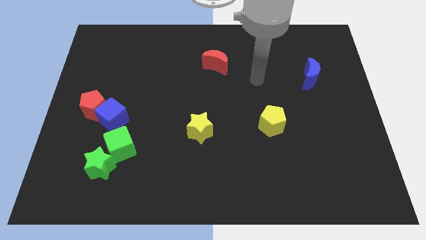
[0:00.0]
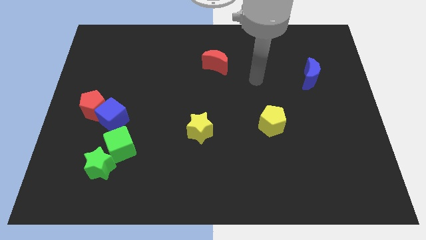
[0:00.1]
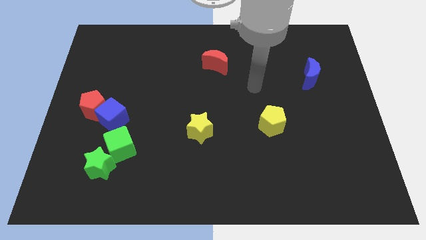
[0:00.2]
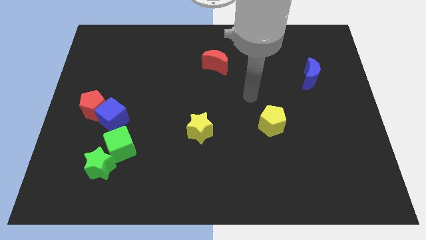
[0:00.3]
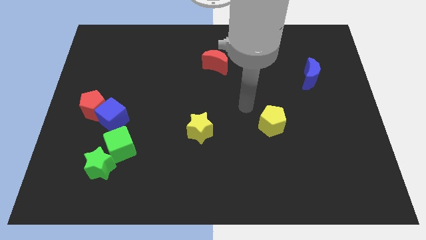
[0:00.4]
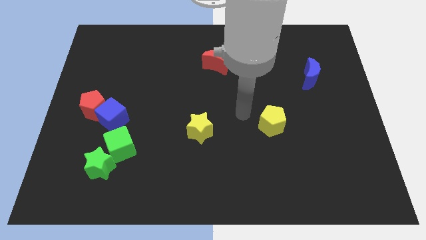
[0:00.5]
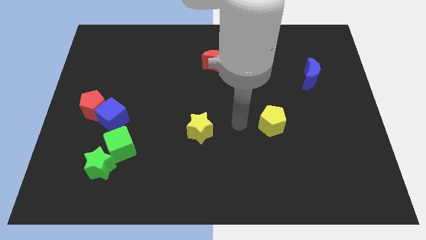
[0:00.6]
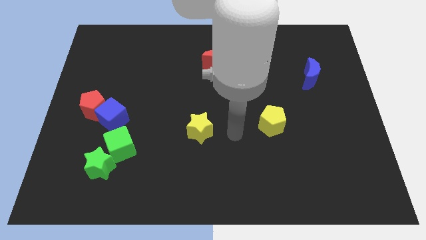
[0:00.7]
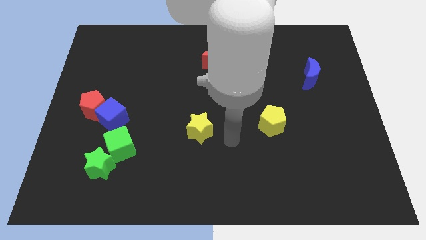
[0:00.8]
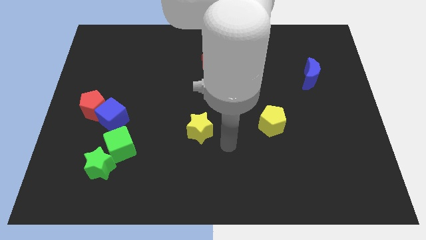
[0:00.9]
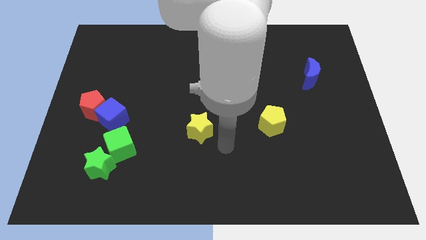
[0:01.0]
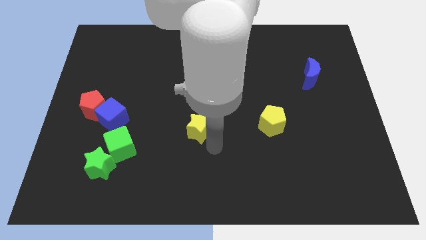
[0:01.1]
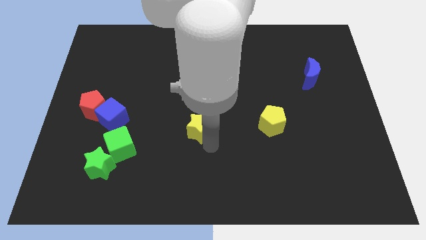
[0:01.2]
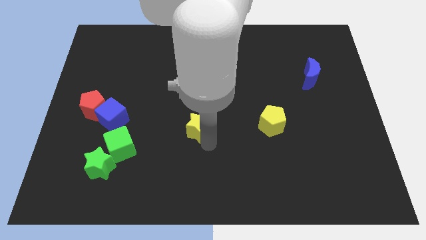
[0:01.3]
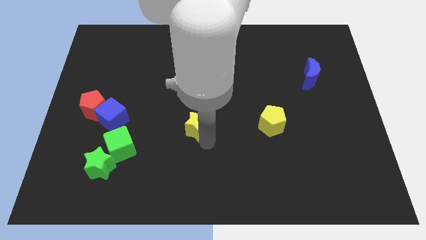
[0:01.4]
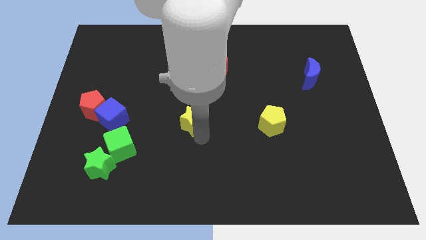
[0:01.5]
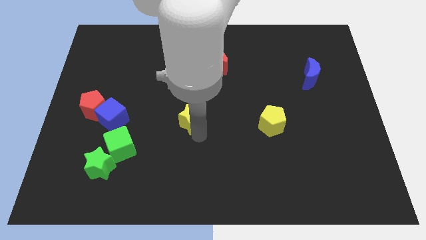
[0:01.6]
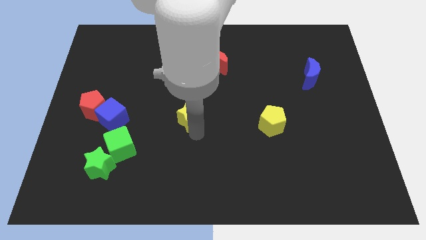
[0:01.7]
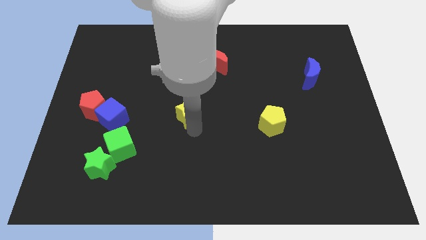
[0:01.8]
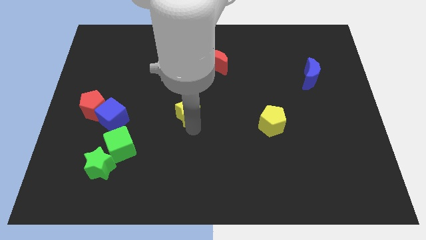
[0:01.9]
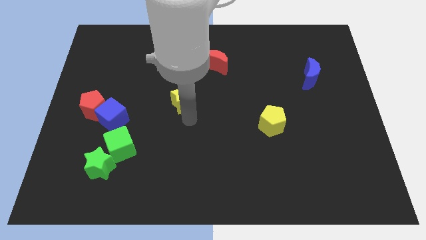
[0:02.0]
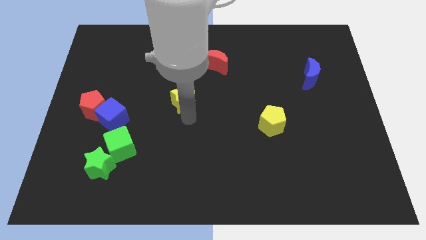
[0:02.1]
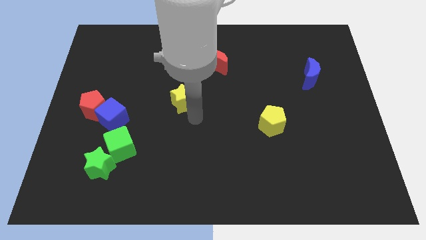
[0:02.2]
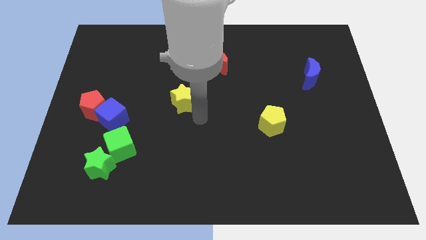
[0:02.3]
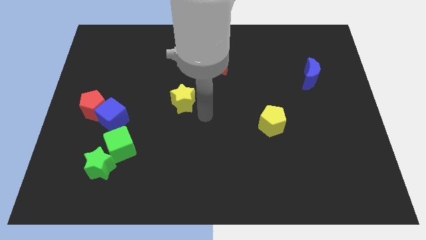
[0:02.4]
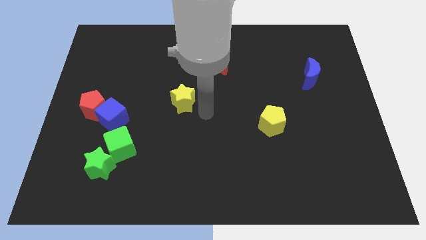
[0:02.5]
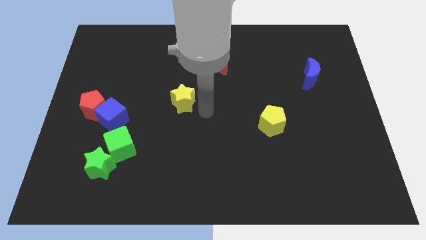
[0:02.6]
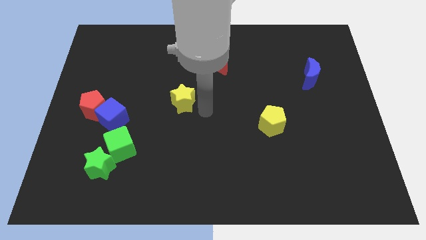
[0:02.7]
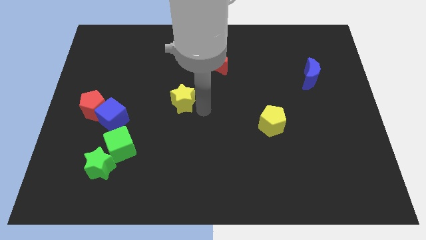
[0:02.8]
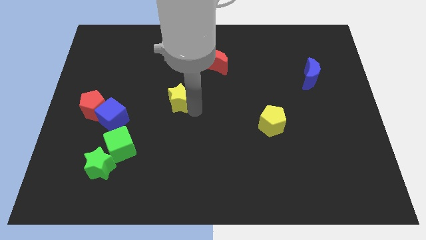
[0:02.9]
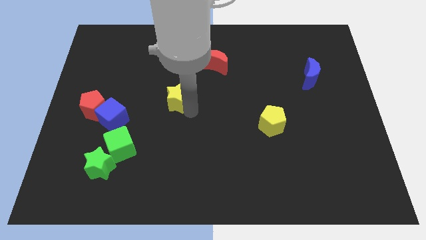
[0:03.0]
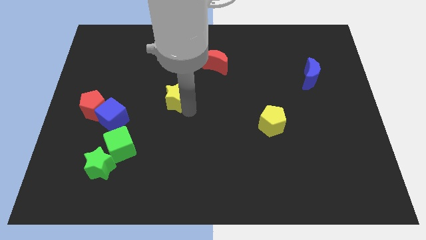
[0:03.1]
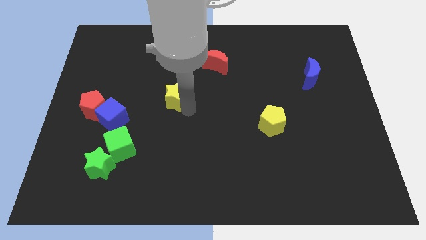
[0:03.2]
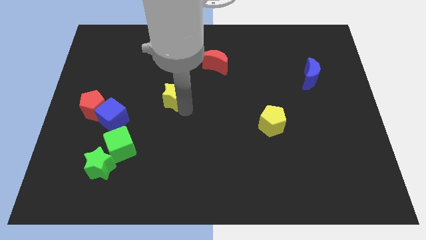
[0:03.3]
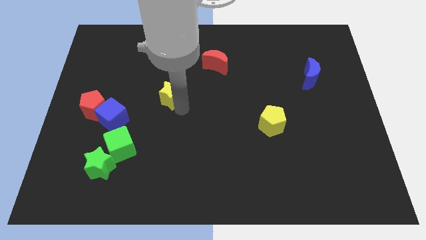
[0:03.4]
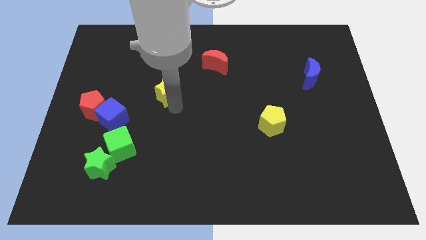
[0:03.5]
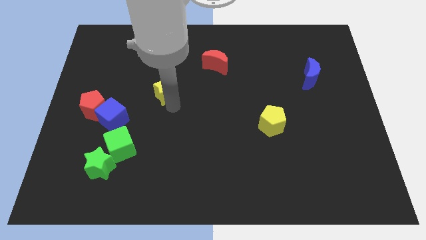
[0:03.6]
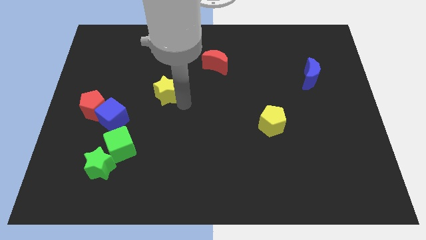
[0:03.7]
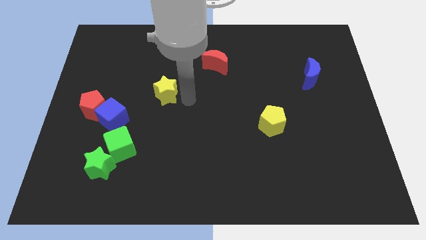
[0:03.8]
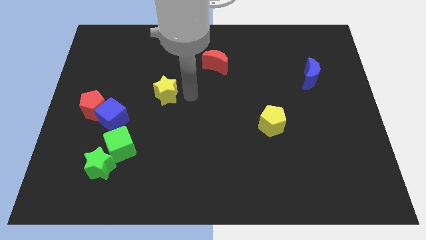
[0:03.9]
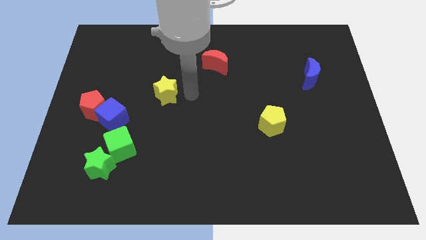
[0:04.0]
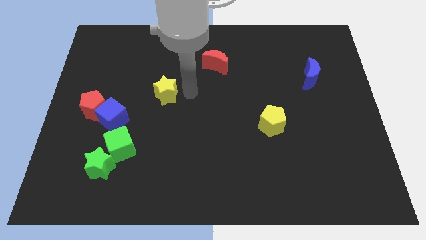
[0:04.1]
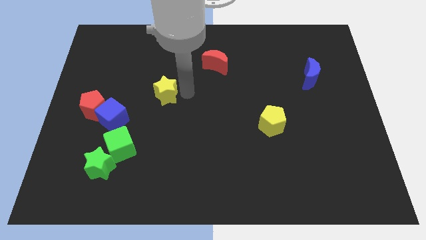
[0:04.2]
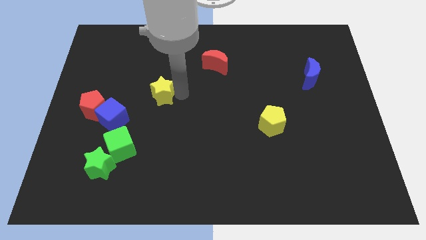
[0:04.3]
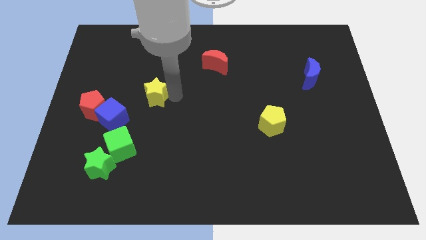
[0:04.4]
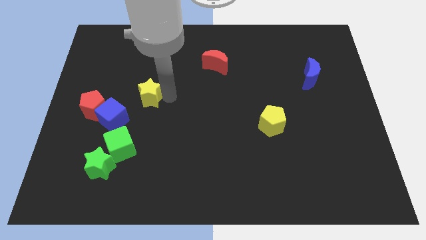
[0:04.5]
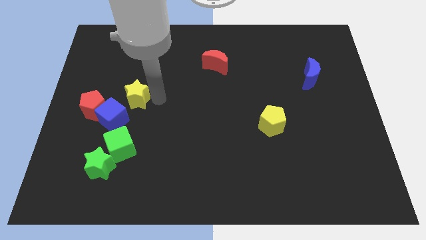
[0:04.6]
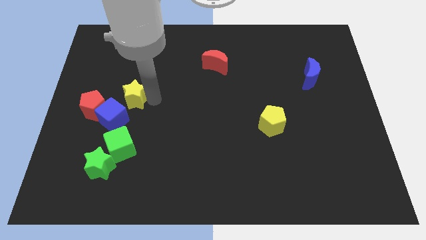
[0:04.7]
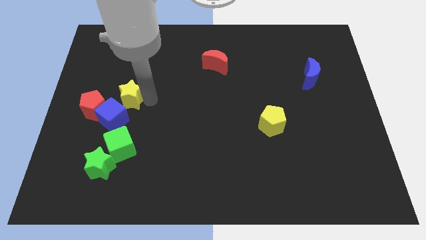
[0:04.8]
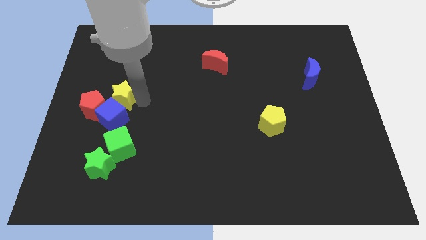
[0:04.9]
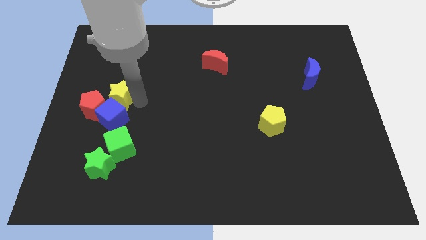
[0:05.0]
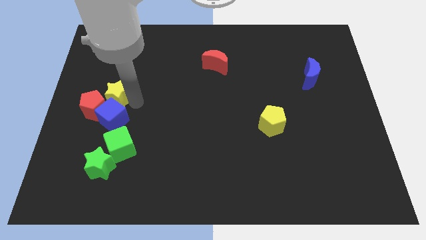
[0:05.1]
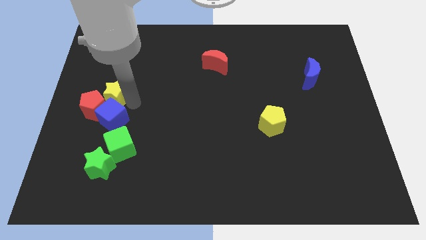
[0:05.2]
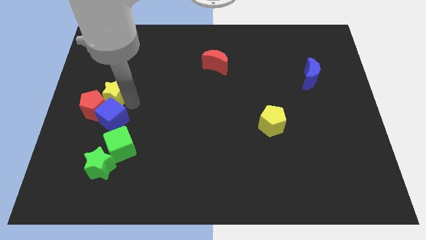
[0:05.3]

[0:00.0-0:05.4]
move the yellow star to the red pentagon

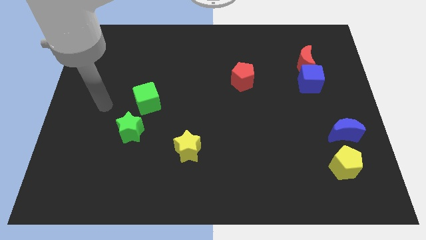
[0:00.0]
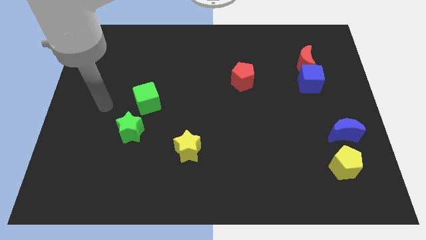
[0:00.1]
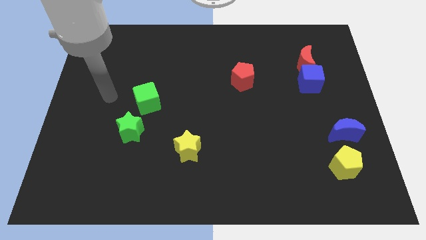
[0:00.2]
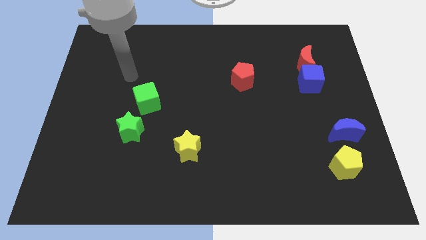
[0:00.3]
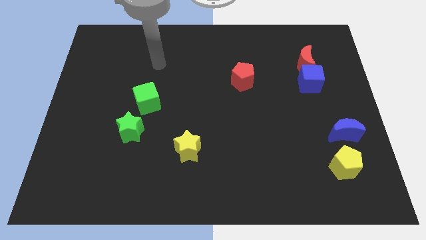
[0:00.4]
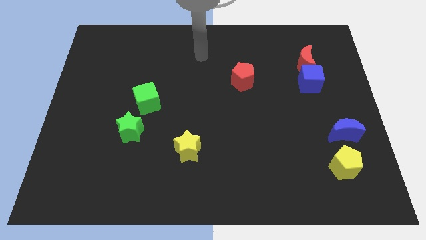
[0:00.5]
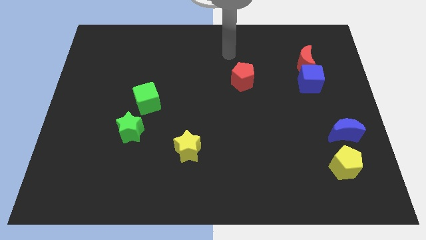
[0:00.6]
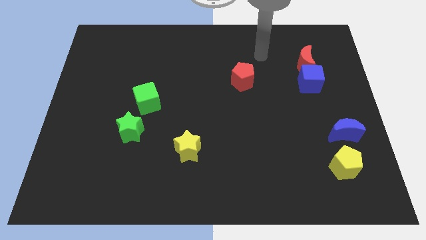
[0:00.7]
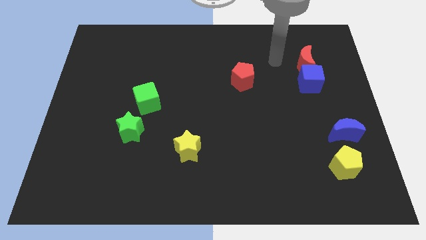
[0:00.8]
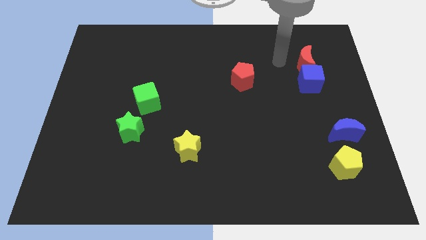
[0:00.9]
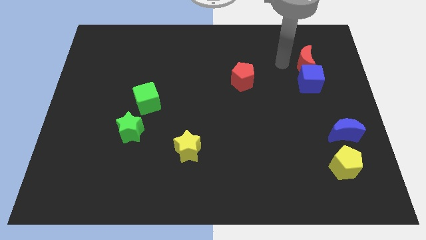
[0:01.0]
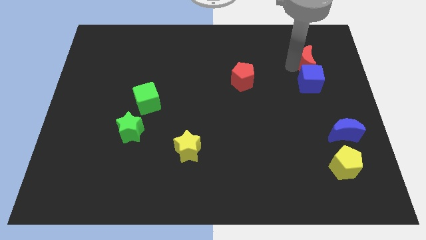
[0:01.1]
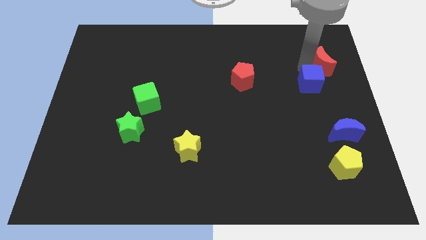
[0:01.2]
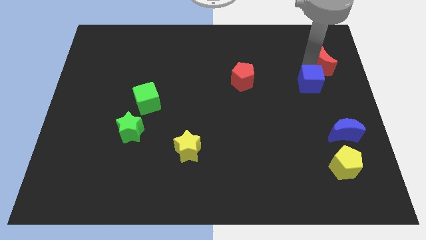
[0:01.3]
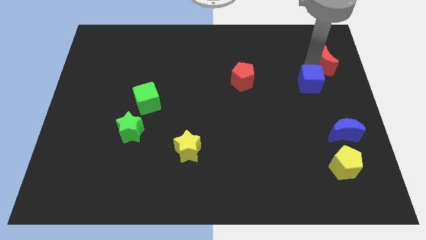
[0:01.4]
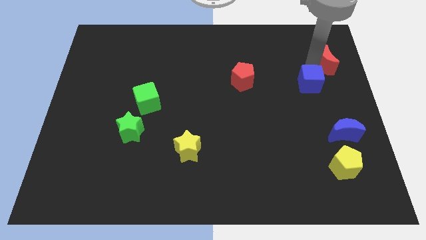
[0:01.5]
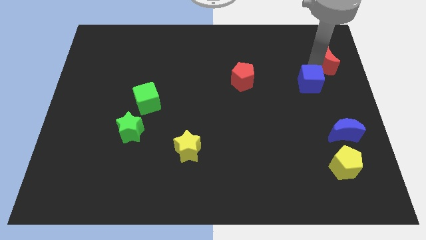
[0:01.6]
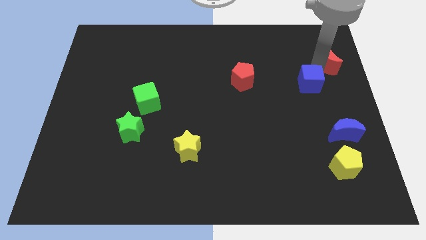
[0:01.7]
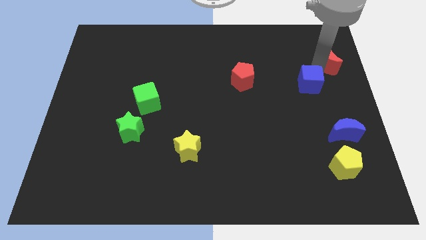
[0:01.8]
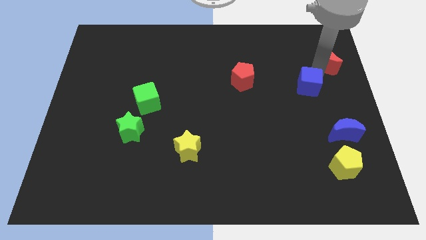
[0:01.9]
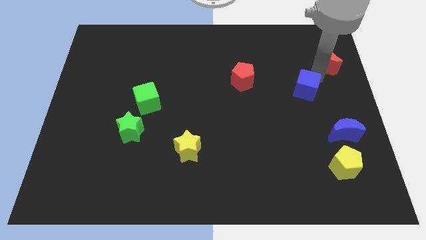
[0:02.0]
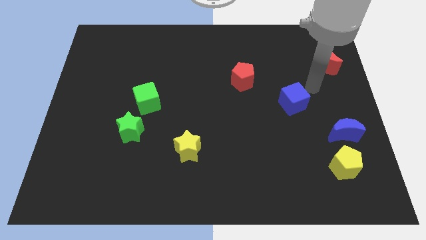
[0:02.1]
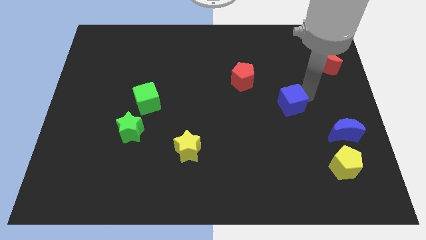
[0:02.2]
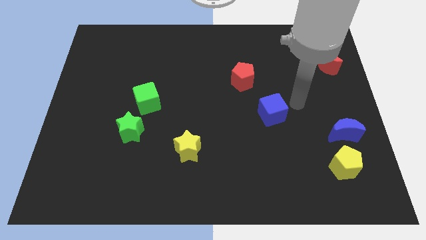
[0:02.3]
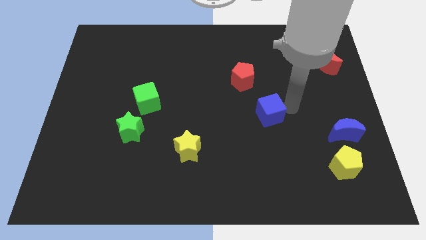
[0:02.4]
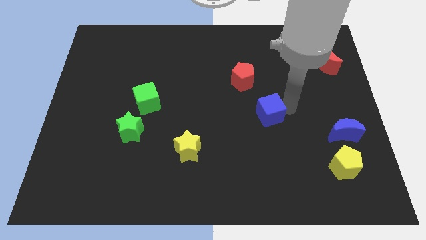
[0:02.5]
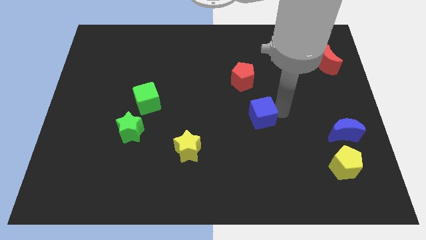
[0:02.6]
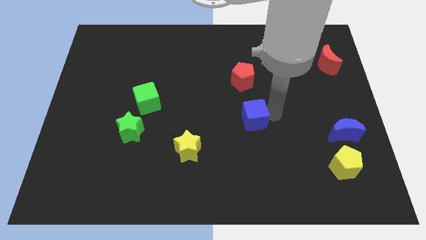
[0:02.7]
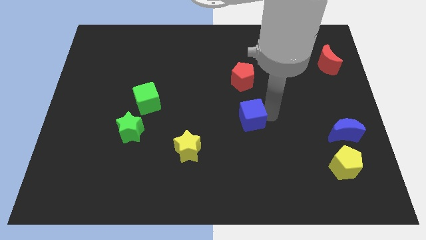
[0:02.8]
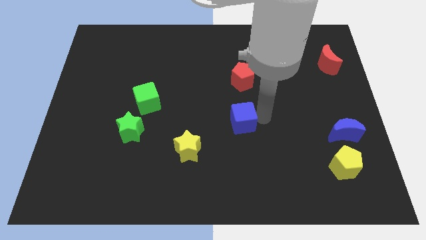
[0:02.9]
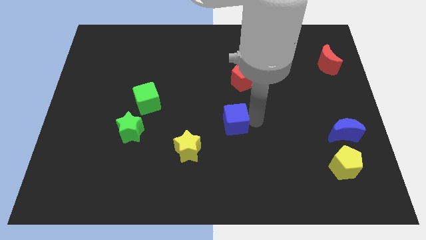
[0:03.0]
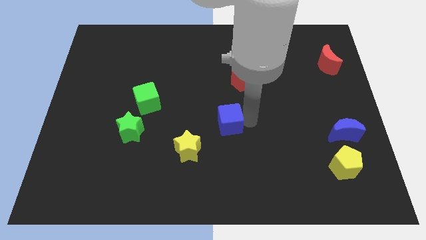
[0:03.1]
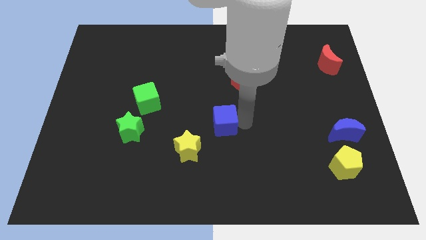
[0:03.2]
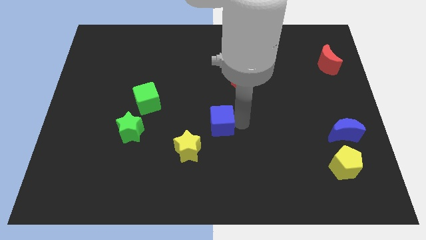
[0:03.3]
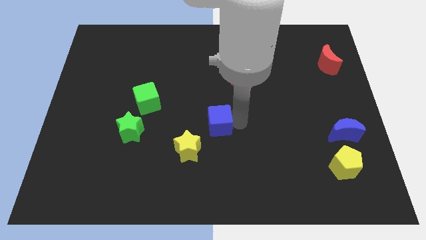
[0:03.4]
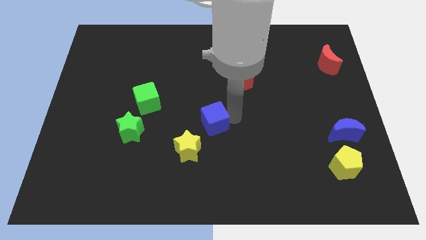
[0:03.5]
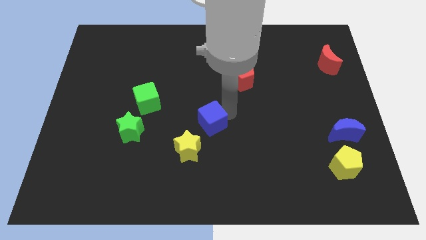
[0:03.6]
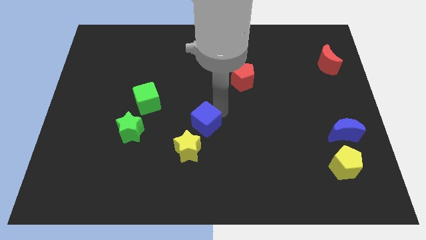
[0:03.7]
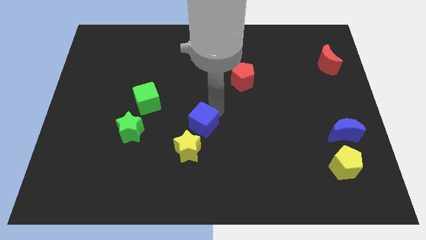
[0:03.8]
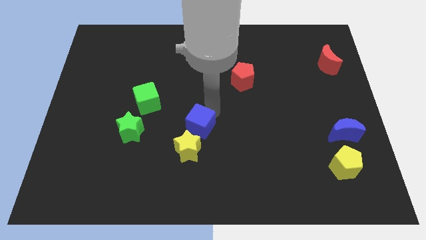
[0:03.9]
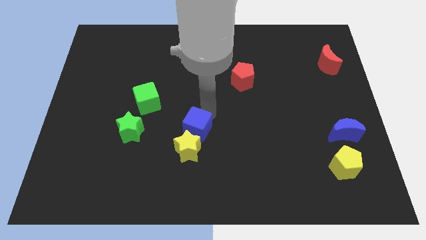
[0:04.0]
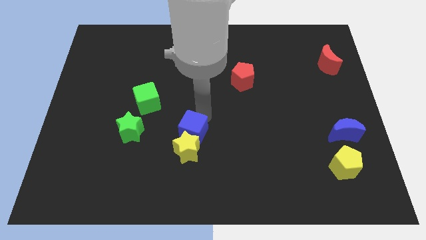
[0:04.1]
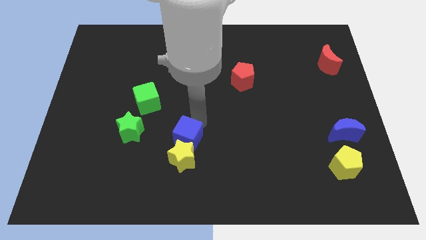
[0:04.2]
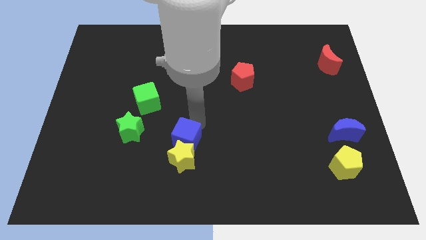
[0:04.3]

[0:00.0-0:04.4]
push the blue cube towards the yellow star
